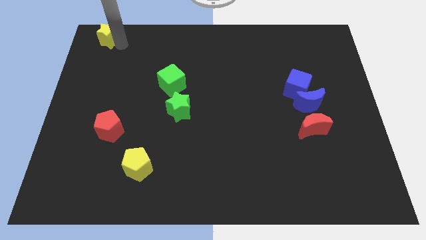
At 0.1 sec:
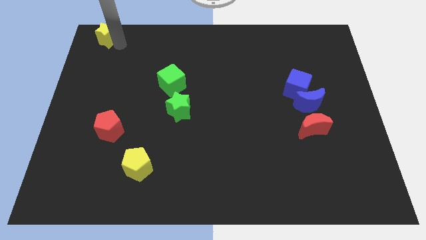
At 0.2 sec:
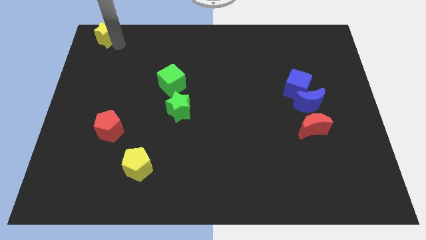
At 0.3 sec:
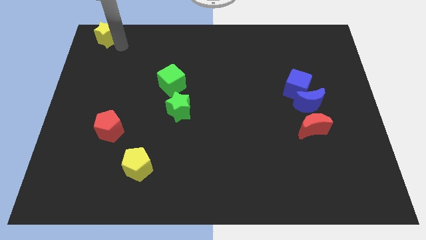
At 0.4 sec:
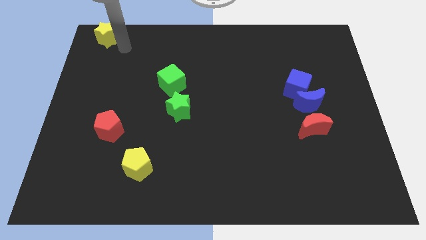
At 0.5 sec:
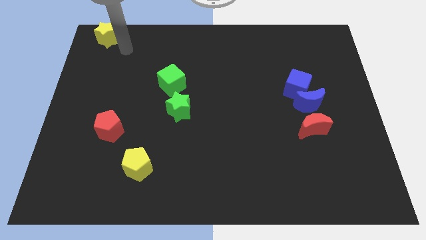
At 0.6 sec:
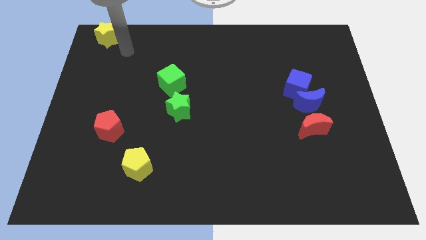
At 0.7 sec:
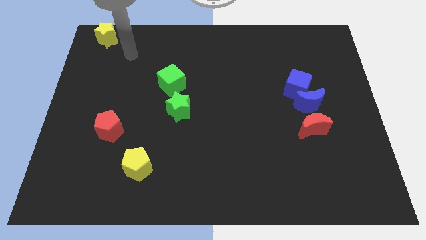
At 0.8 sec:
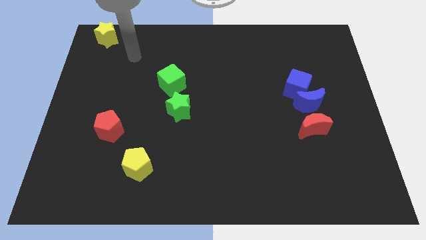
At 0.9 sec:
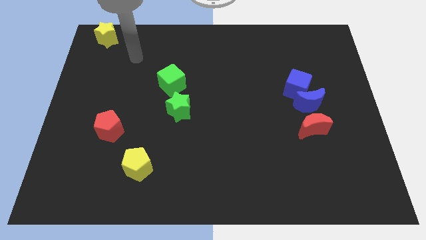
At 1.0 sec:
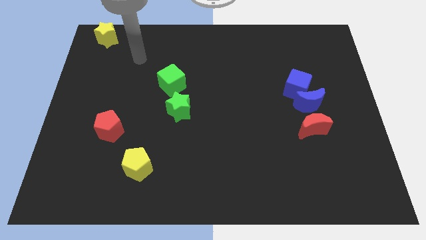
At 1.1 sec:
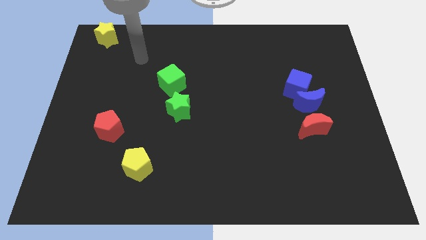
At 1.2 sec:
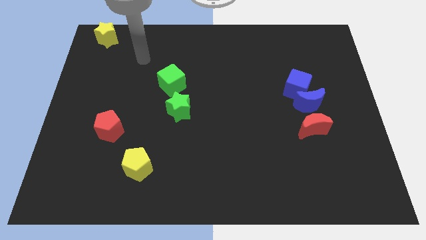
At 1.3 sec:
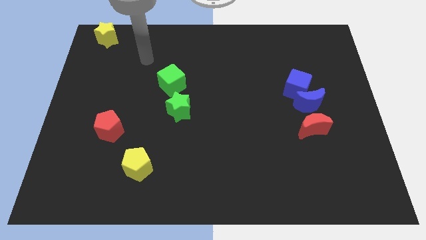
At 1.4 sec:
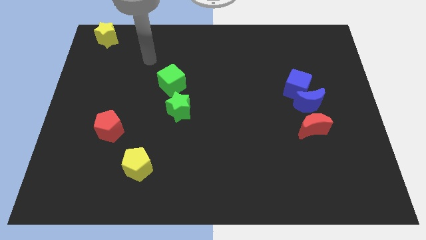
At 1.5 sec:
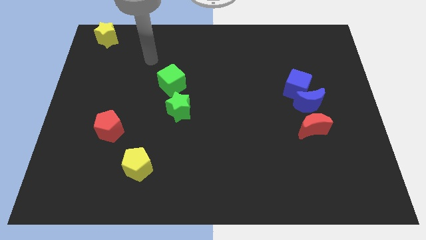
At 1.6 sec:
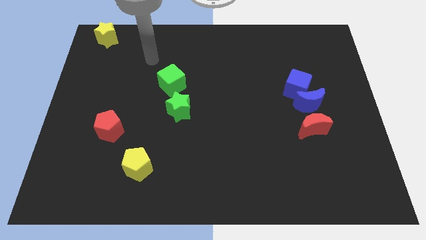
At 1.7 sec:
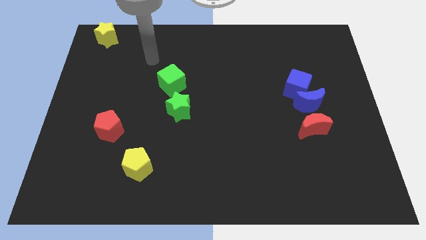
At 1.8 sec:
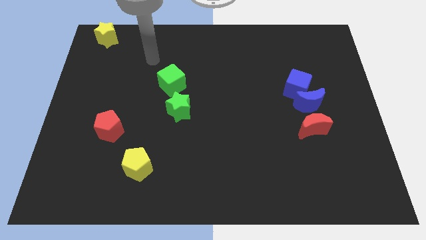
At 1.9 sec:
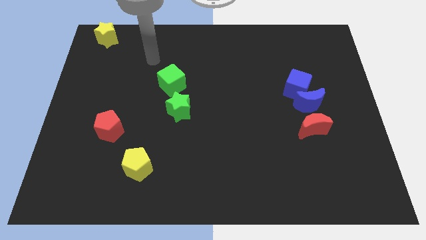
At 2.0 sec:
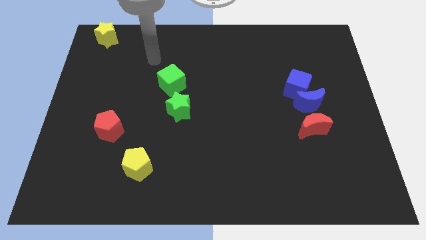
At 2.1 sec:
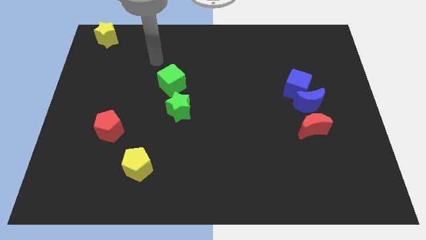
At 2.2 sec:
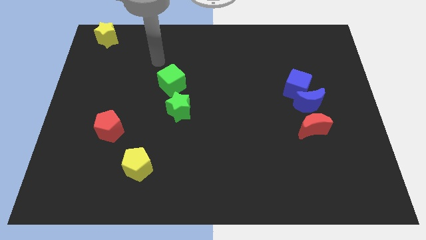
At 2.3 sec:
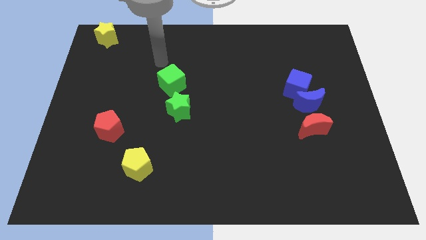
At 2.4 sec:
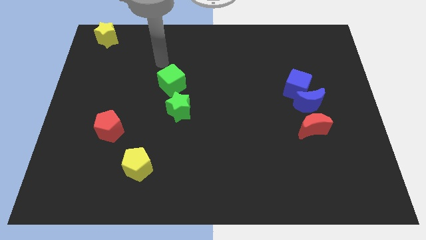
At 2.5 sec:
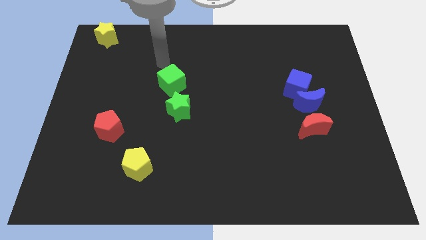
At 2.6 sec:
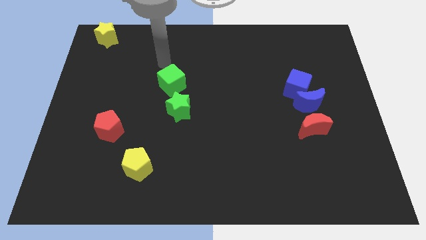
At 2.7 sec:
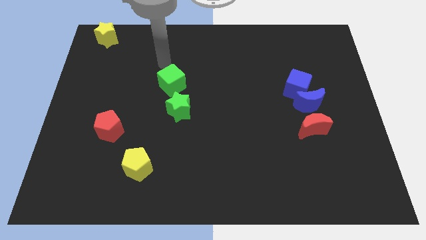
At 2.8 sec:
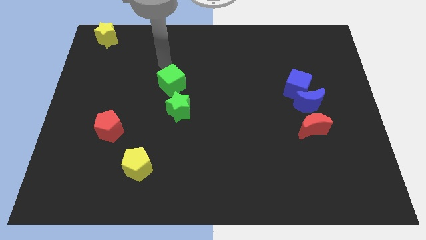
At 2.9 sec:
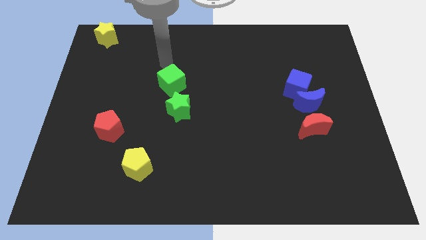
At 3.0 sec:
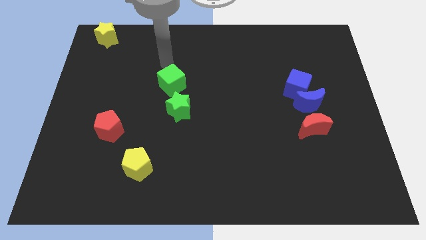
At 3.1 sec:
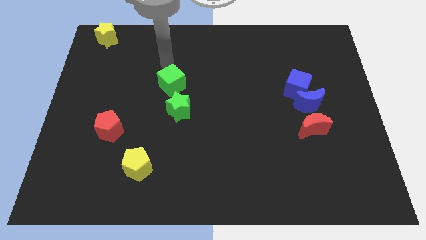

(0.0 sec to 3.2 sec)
move the arm towards the top of the green cube

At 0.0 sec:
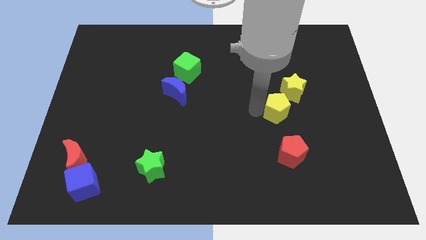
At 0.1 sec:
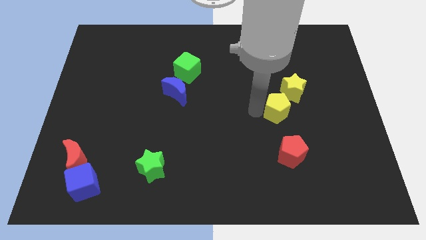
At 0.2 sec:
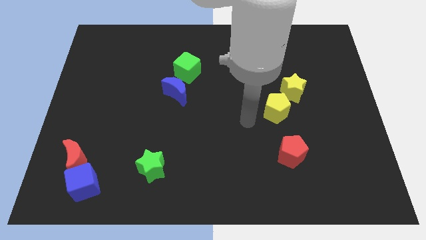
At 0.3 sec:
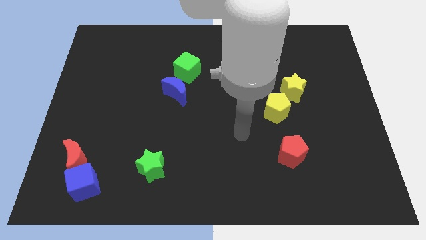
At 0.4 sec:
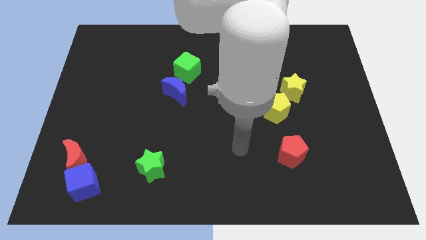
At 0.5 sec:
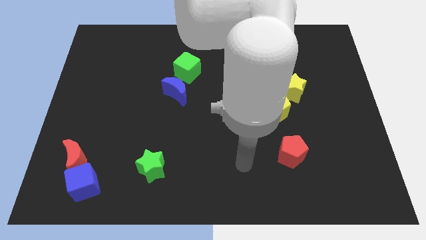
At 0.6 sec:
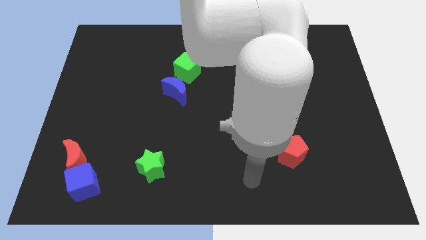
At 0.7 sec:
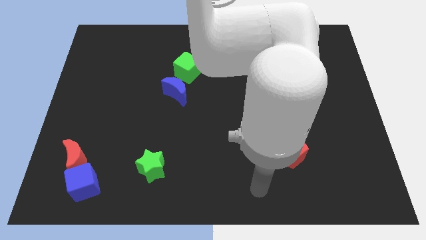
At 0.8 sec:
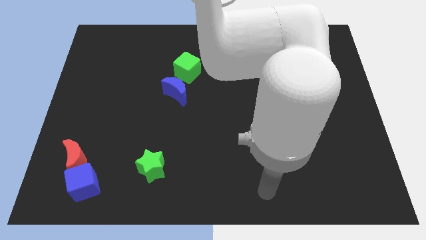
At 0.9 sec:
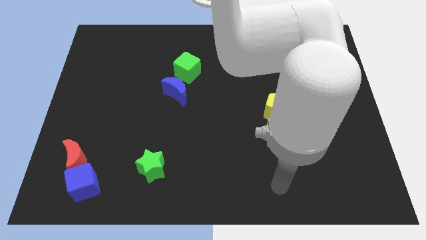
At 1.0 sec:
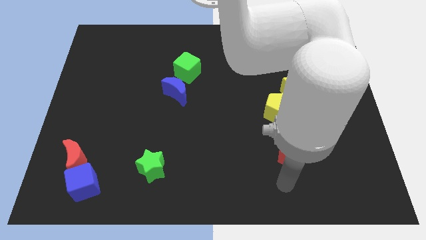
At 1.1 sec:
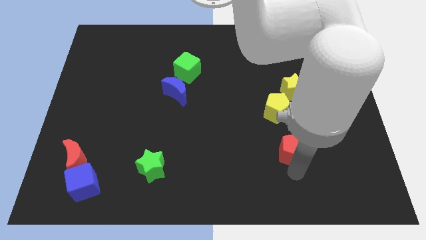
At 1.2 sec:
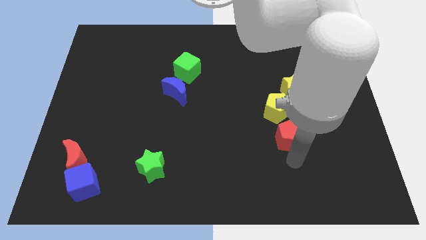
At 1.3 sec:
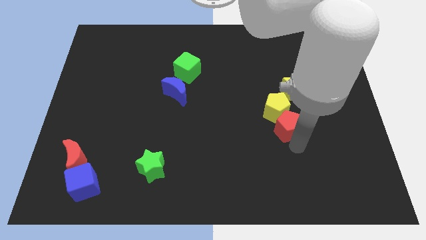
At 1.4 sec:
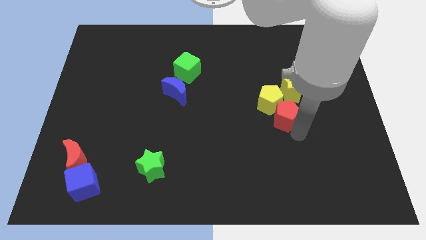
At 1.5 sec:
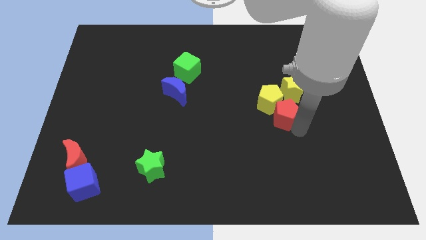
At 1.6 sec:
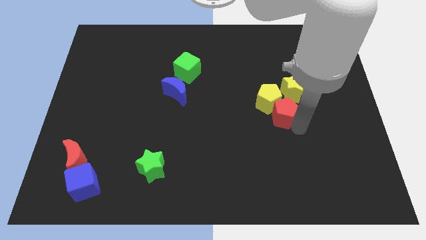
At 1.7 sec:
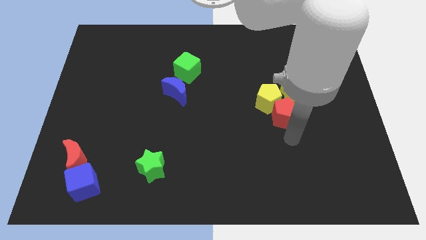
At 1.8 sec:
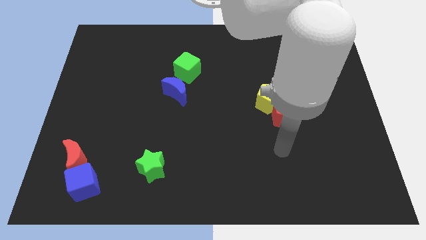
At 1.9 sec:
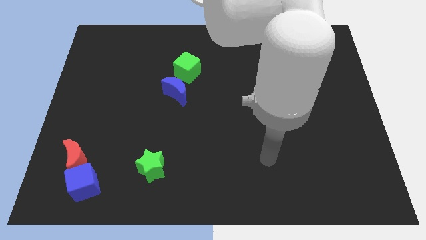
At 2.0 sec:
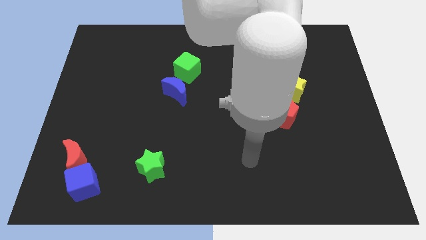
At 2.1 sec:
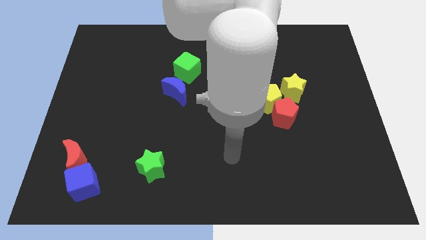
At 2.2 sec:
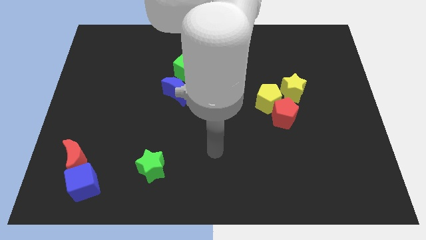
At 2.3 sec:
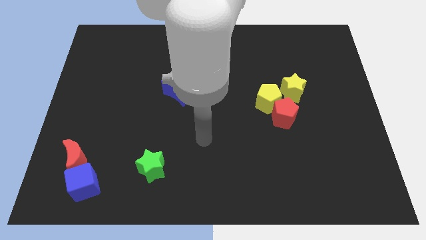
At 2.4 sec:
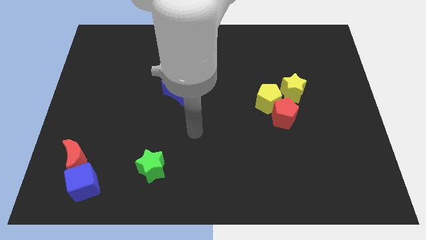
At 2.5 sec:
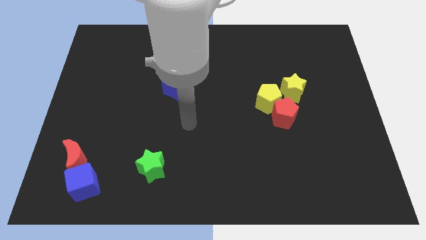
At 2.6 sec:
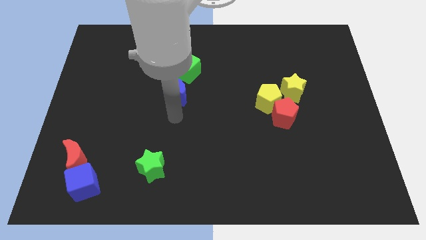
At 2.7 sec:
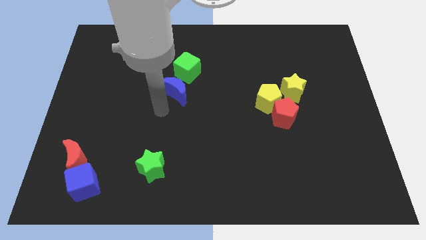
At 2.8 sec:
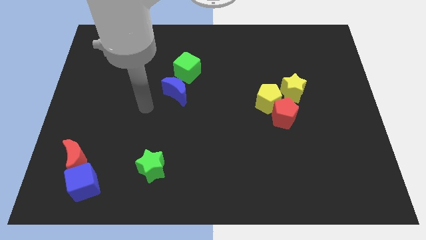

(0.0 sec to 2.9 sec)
move the red pentagon into yellow pentagon

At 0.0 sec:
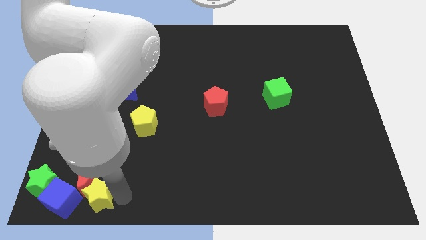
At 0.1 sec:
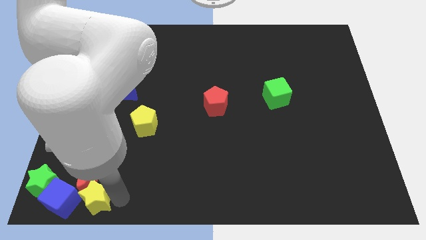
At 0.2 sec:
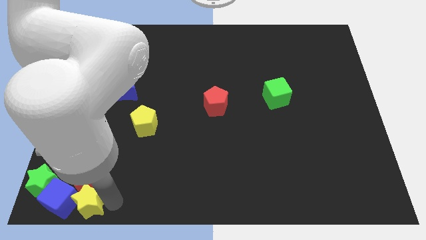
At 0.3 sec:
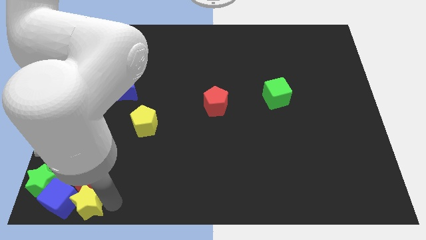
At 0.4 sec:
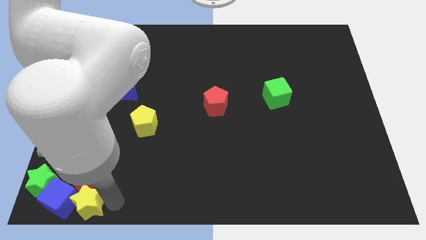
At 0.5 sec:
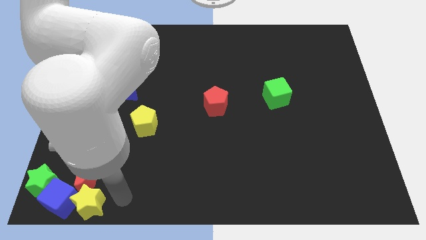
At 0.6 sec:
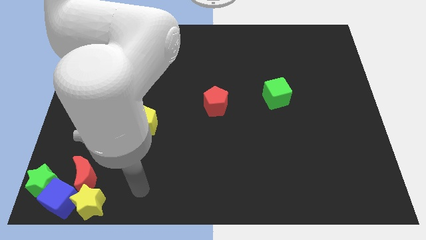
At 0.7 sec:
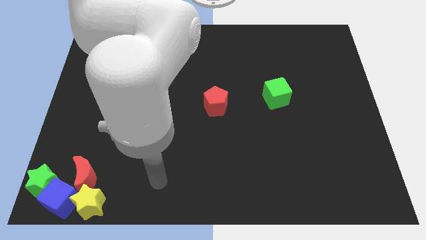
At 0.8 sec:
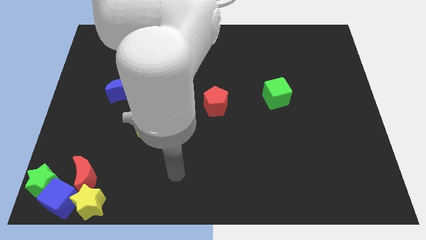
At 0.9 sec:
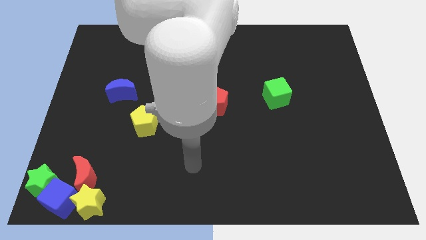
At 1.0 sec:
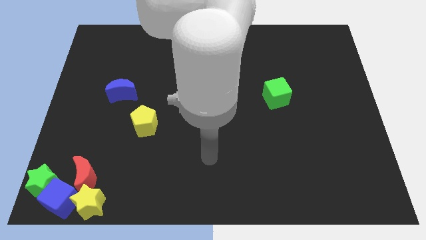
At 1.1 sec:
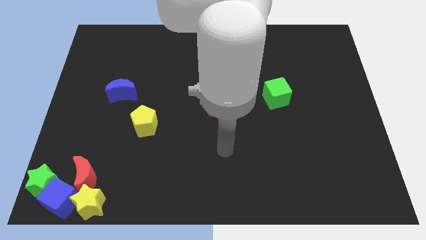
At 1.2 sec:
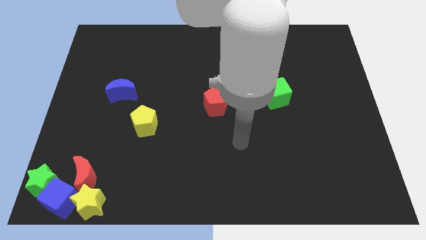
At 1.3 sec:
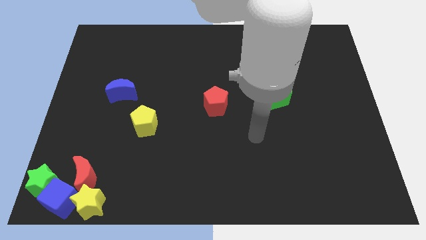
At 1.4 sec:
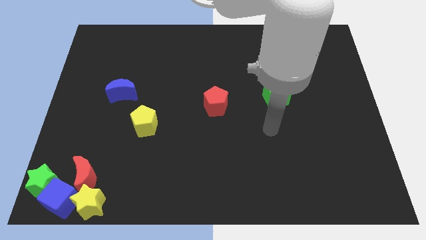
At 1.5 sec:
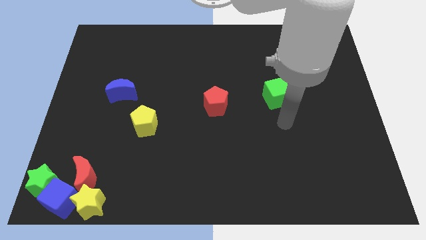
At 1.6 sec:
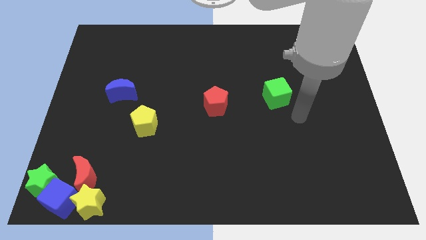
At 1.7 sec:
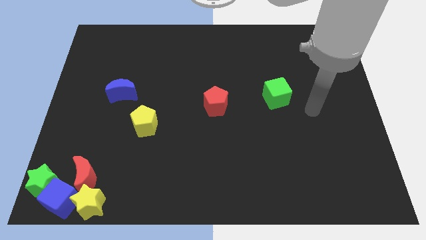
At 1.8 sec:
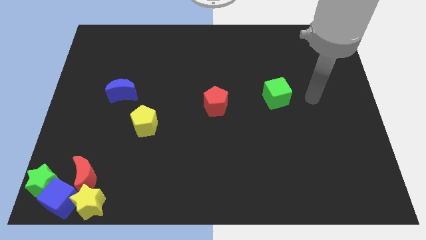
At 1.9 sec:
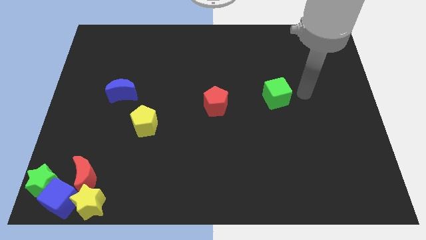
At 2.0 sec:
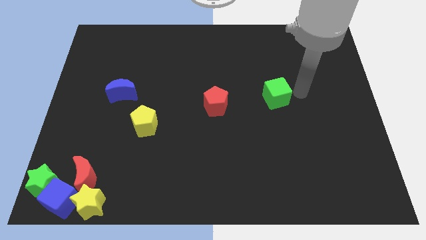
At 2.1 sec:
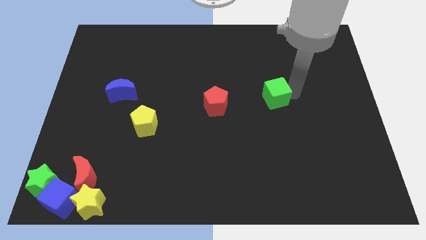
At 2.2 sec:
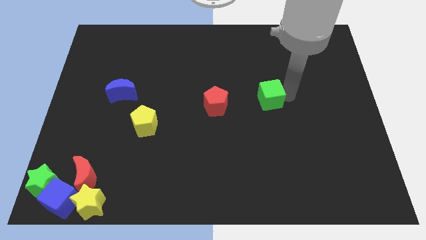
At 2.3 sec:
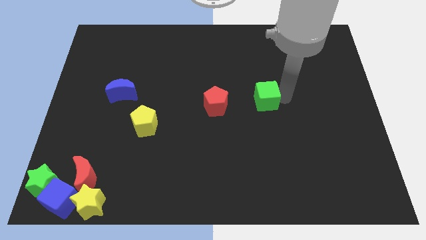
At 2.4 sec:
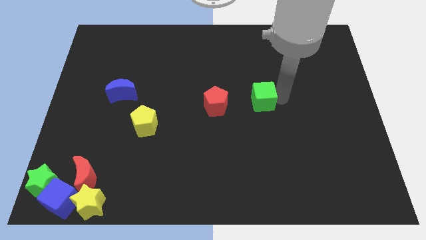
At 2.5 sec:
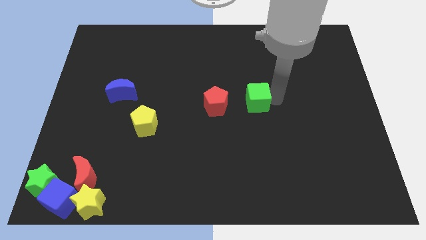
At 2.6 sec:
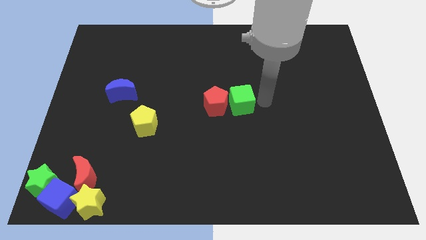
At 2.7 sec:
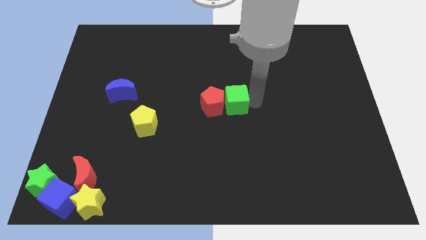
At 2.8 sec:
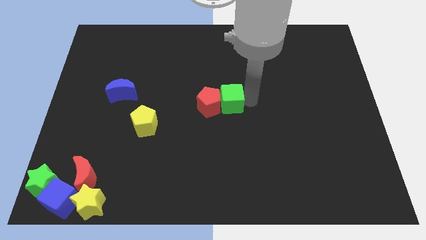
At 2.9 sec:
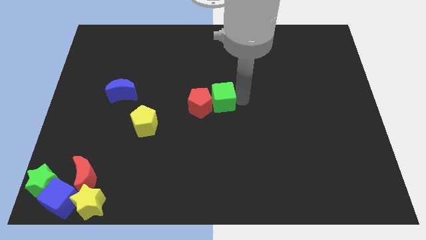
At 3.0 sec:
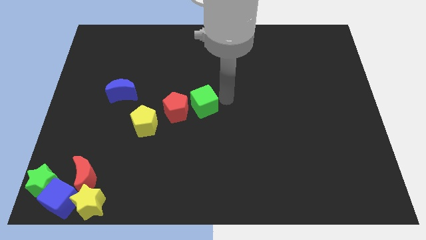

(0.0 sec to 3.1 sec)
push green cube into red pentagon
